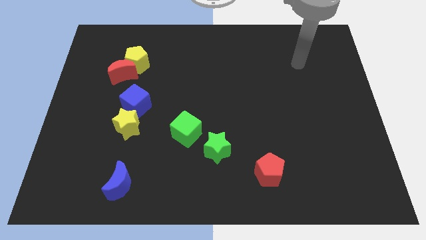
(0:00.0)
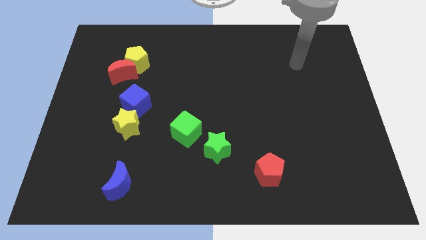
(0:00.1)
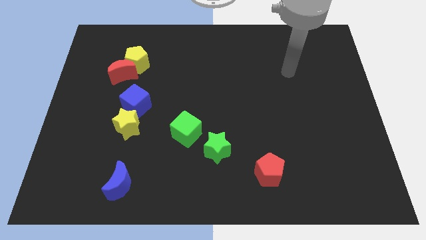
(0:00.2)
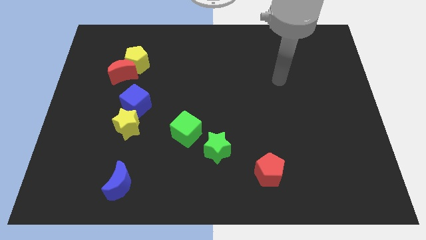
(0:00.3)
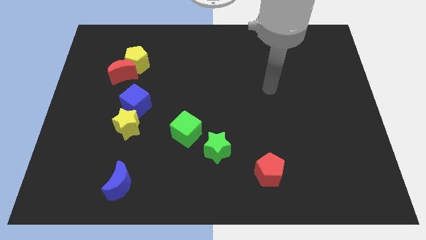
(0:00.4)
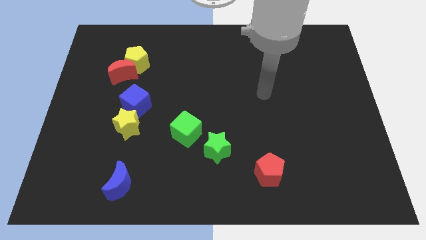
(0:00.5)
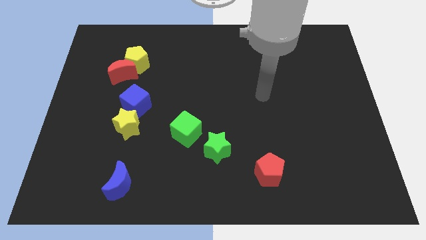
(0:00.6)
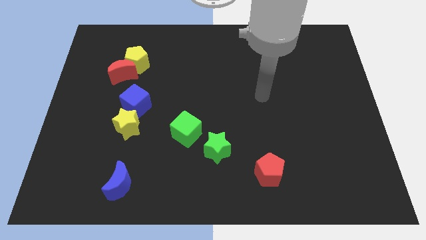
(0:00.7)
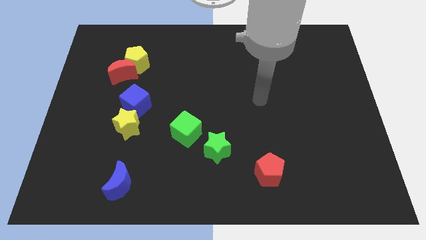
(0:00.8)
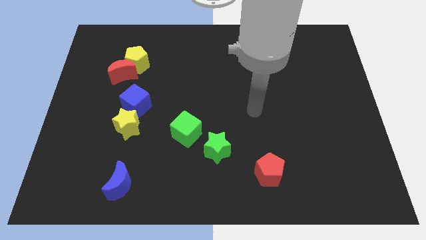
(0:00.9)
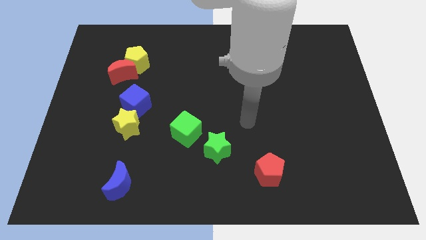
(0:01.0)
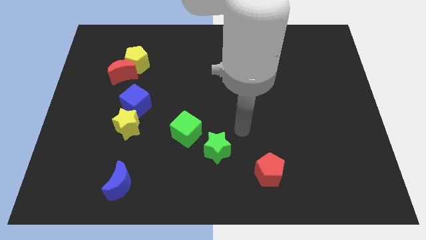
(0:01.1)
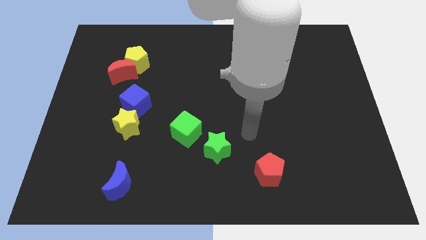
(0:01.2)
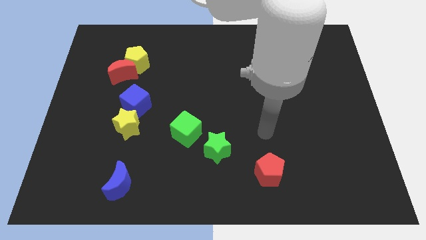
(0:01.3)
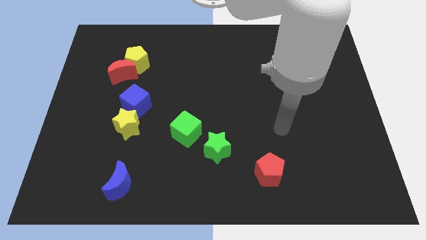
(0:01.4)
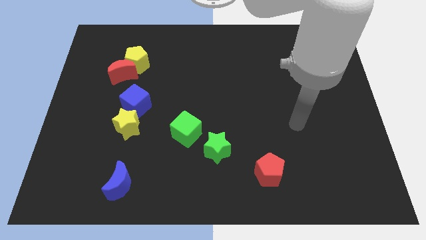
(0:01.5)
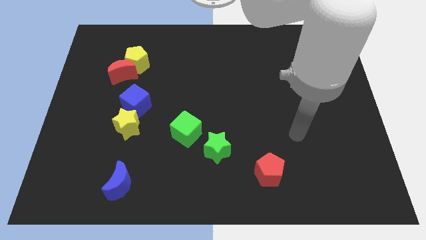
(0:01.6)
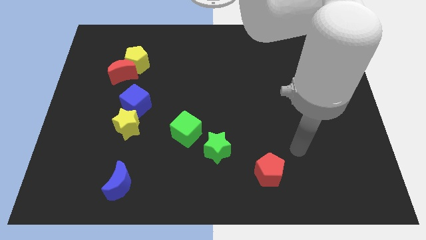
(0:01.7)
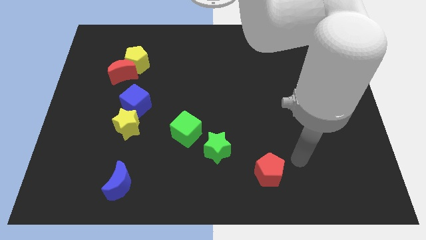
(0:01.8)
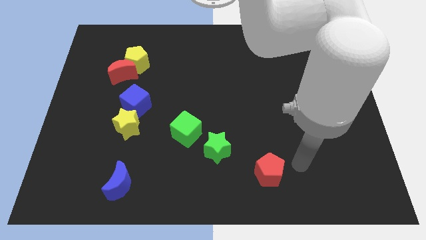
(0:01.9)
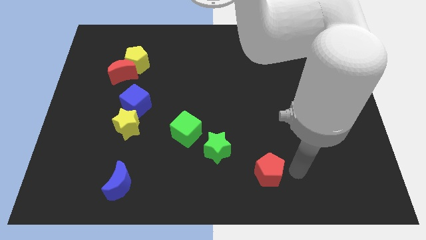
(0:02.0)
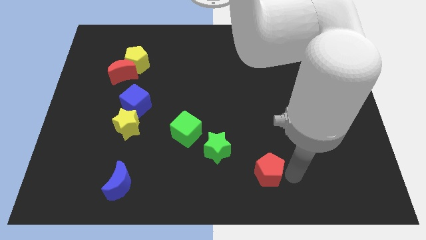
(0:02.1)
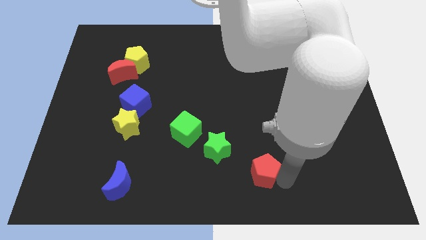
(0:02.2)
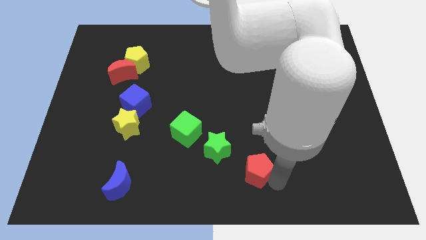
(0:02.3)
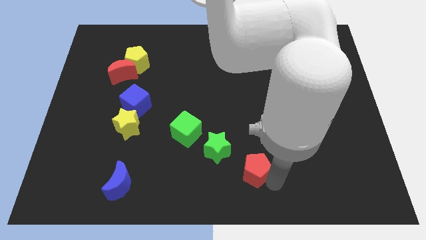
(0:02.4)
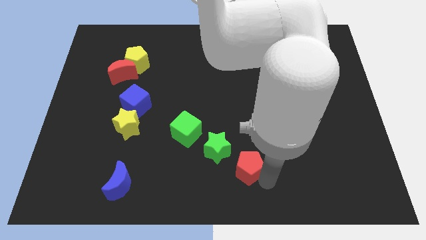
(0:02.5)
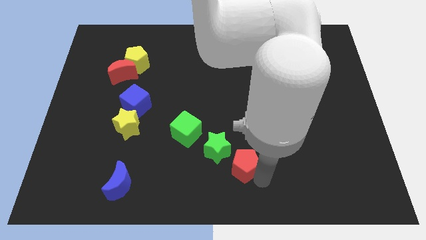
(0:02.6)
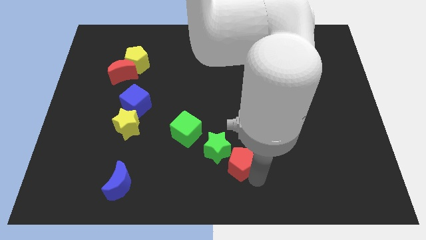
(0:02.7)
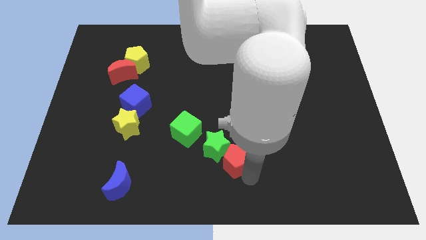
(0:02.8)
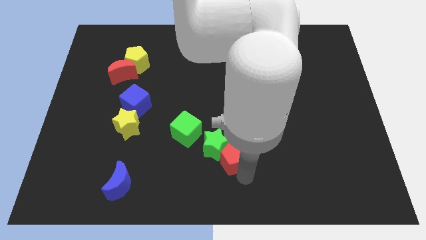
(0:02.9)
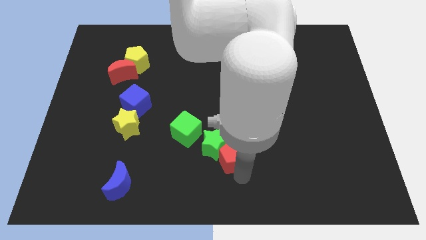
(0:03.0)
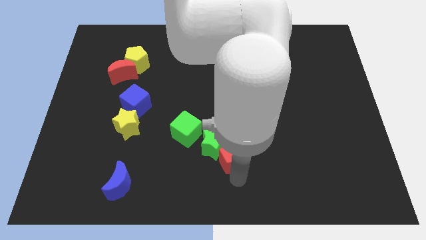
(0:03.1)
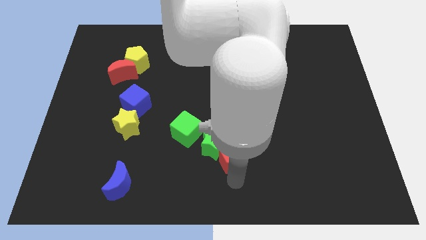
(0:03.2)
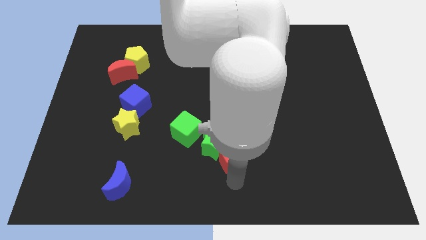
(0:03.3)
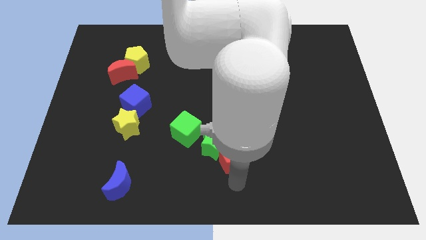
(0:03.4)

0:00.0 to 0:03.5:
push the red pentagon into the green star

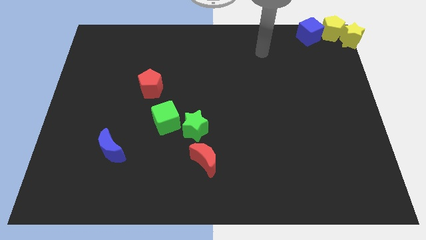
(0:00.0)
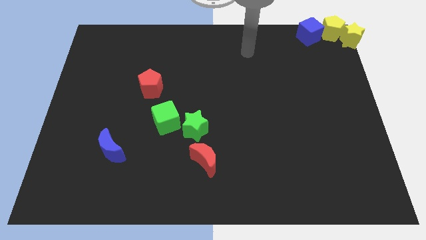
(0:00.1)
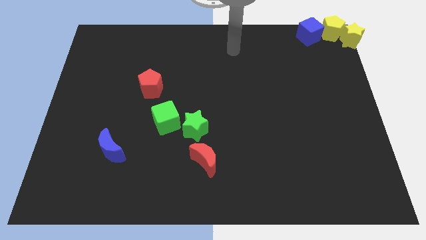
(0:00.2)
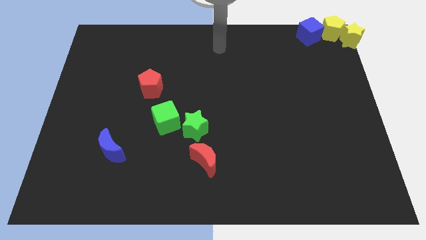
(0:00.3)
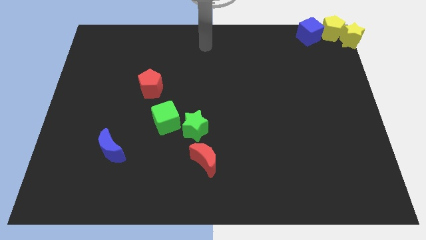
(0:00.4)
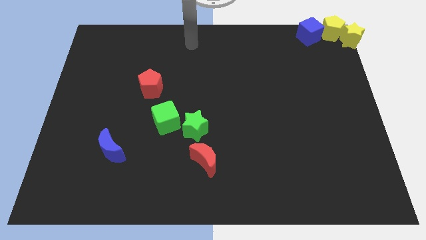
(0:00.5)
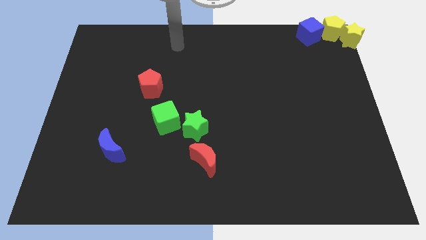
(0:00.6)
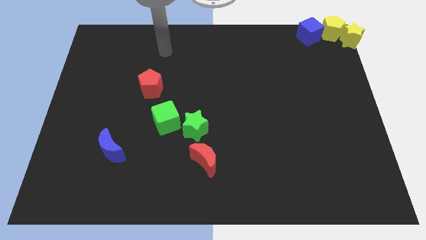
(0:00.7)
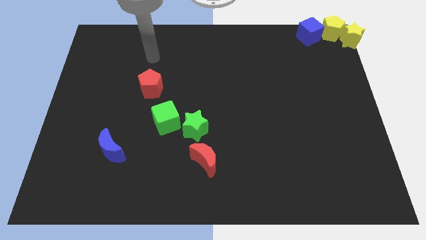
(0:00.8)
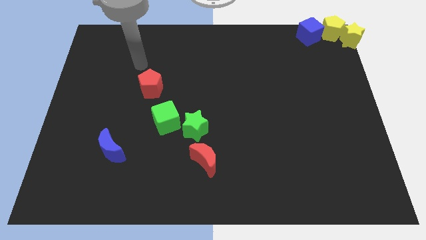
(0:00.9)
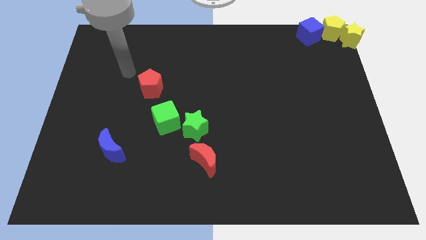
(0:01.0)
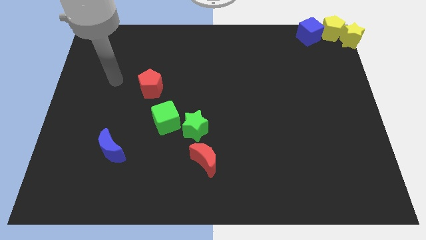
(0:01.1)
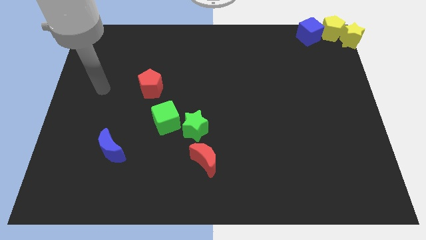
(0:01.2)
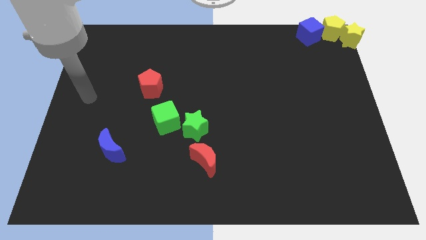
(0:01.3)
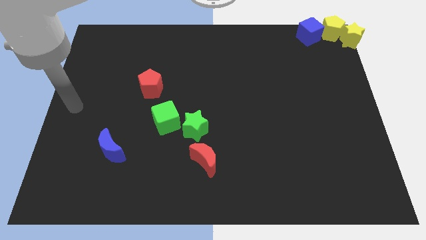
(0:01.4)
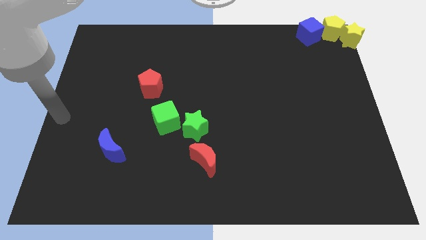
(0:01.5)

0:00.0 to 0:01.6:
place your arm at the center left of the board

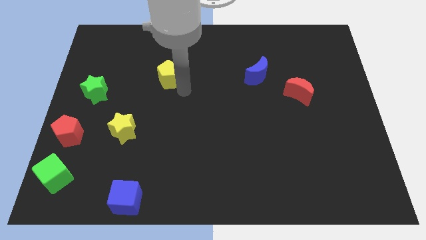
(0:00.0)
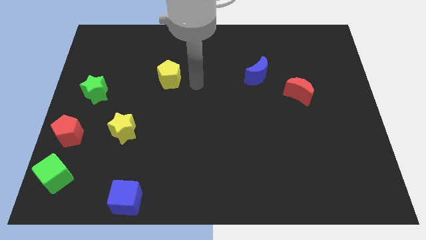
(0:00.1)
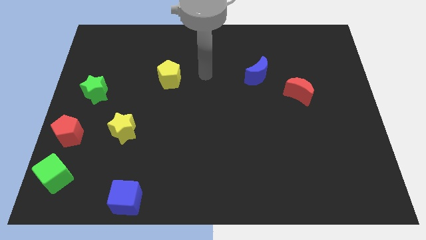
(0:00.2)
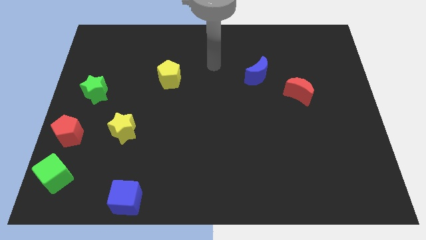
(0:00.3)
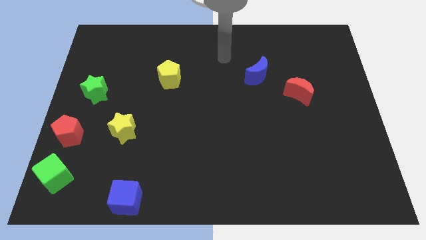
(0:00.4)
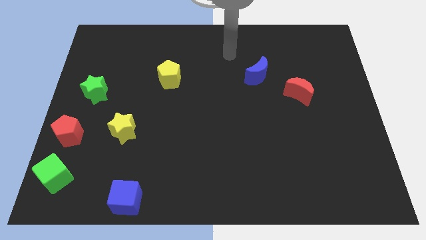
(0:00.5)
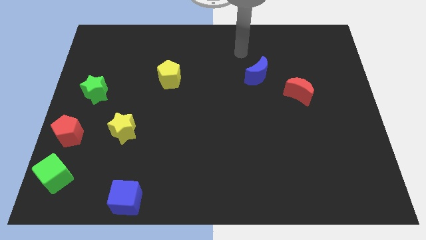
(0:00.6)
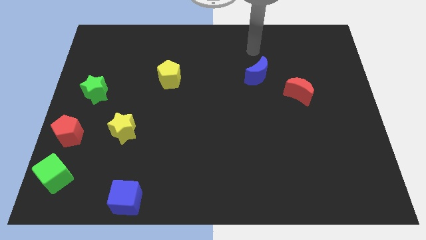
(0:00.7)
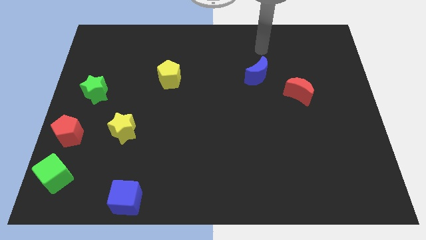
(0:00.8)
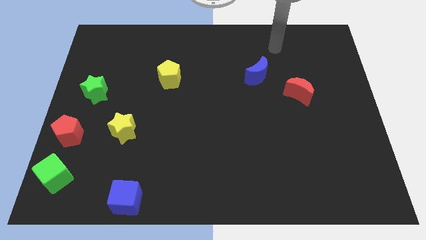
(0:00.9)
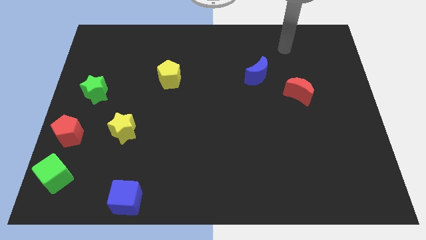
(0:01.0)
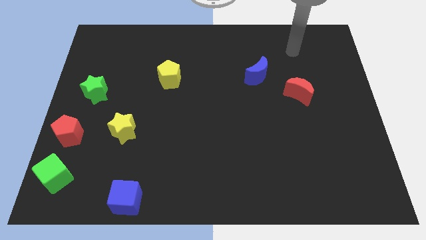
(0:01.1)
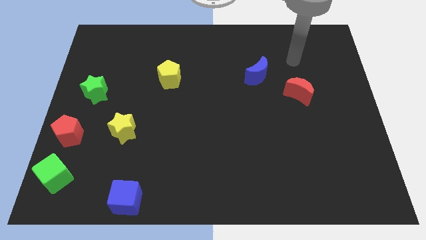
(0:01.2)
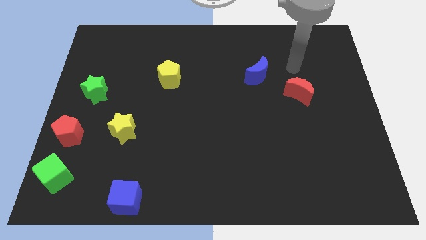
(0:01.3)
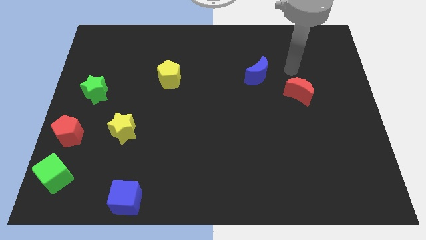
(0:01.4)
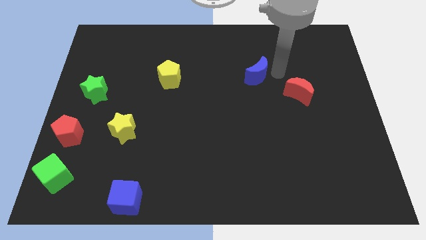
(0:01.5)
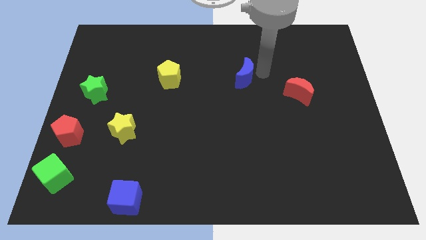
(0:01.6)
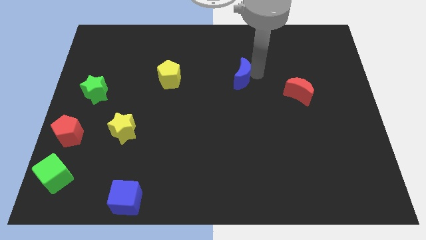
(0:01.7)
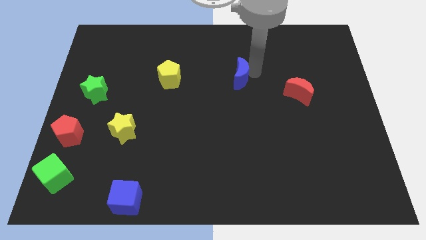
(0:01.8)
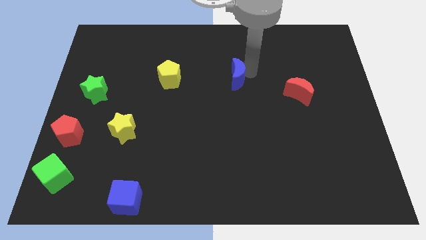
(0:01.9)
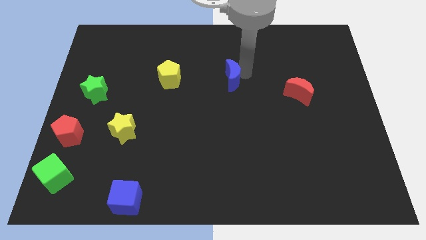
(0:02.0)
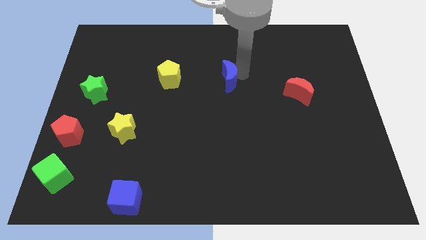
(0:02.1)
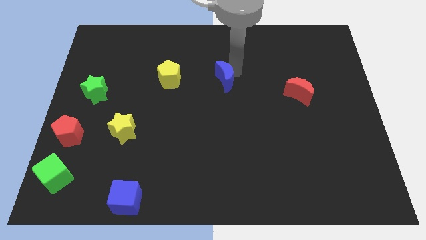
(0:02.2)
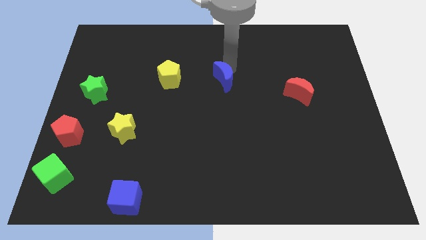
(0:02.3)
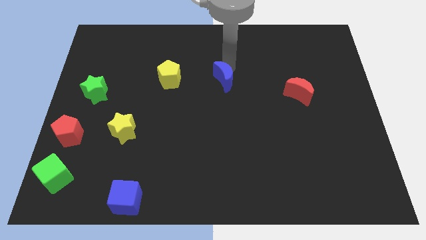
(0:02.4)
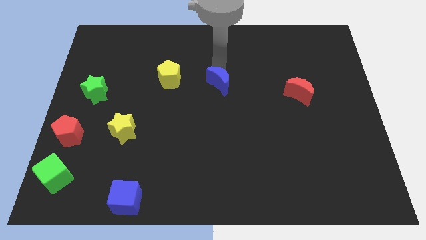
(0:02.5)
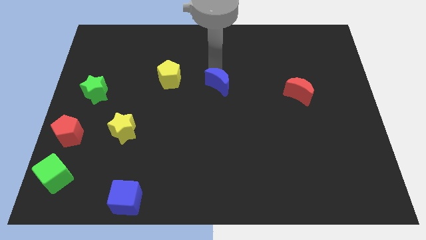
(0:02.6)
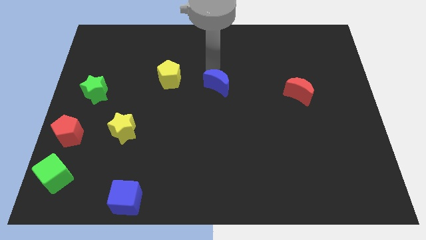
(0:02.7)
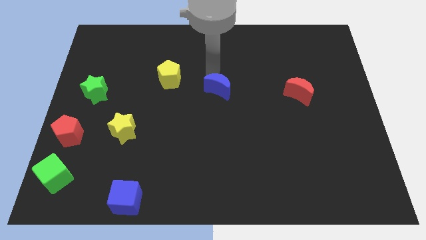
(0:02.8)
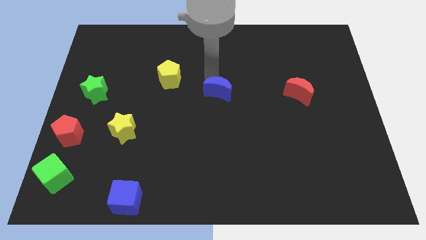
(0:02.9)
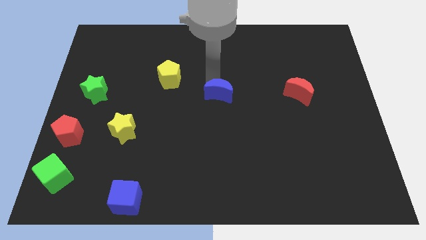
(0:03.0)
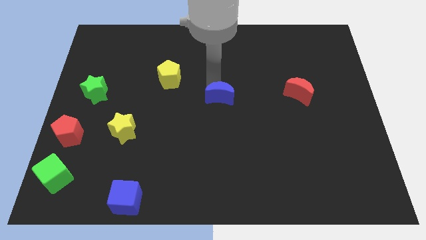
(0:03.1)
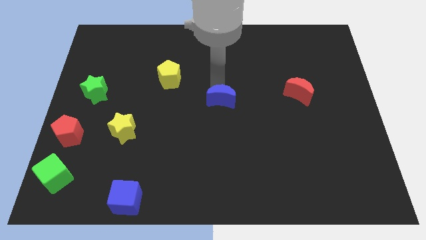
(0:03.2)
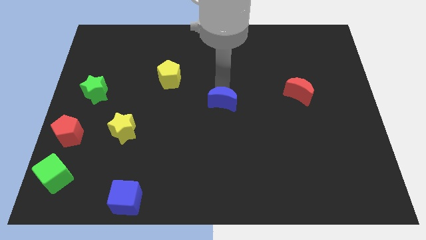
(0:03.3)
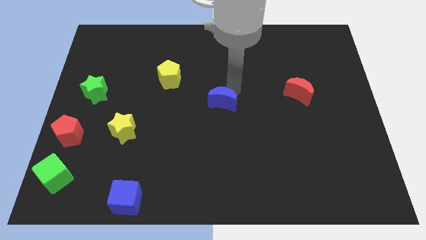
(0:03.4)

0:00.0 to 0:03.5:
move the blue crescent to the center of the board

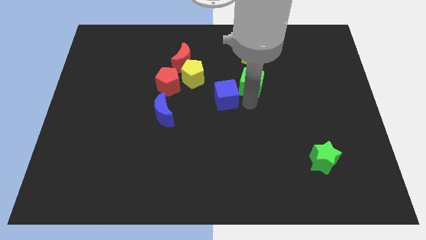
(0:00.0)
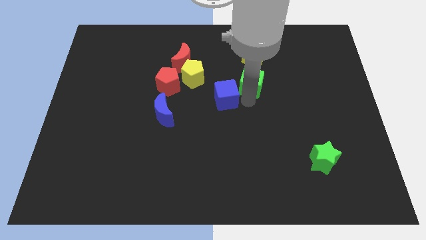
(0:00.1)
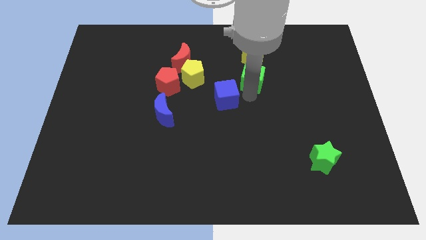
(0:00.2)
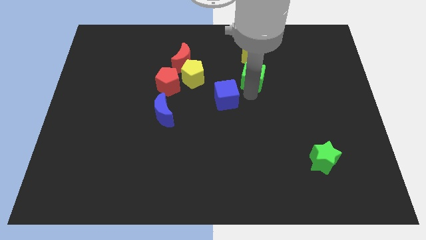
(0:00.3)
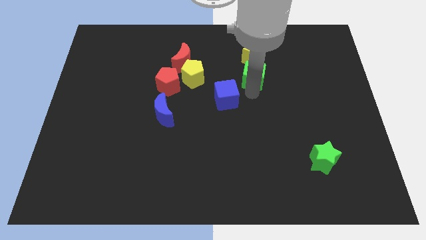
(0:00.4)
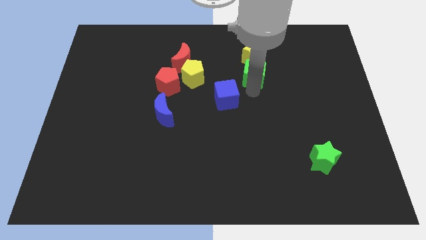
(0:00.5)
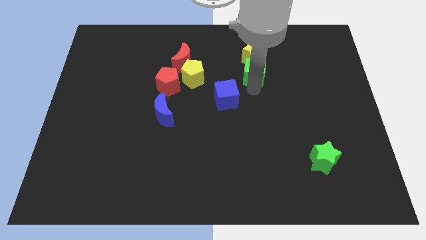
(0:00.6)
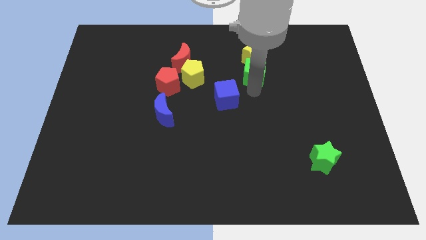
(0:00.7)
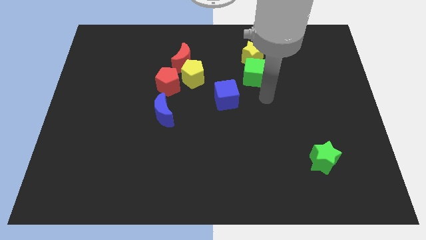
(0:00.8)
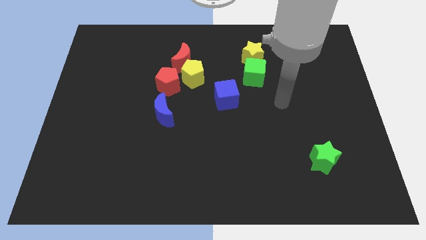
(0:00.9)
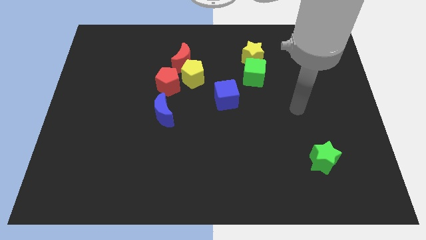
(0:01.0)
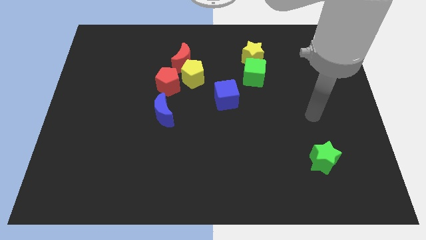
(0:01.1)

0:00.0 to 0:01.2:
move the green cube into bottom of yellow star
